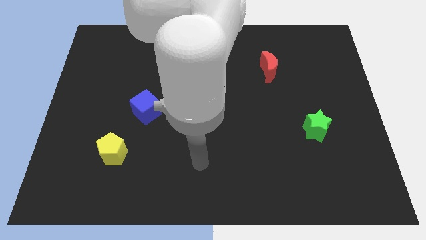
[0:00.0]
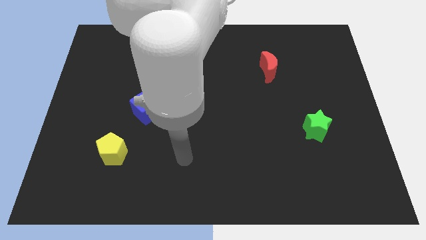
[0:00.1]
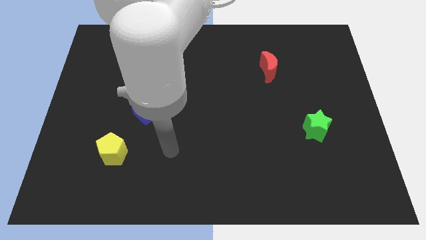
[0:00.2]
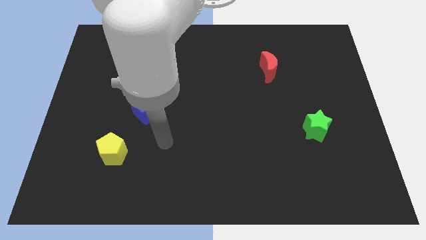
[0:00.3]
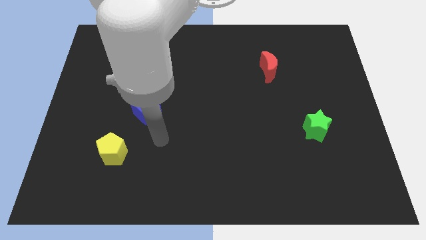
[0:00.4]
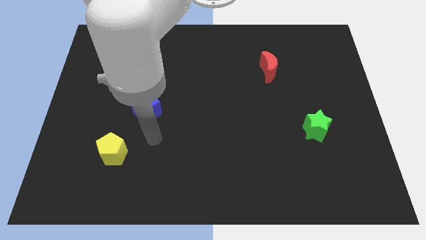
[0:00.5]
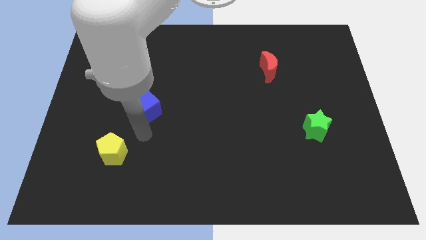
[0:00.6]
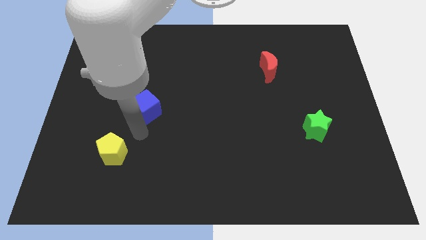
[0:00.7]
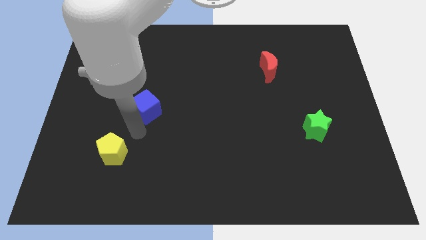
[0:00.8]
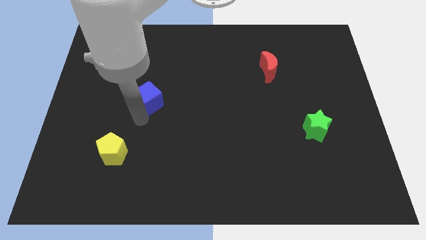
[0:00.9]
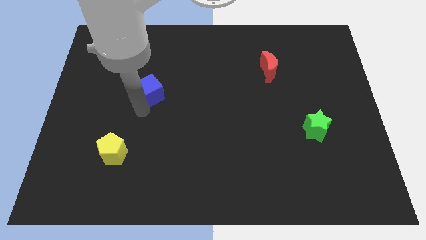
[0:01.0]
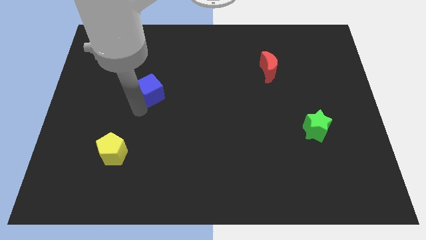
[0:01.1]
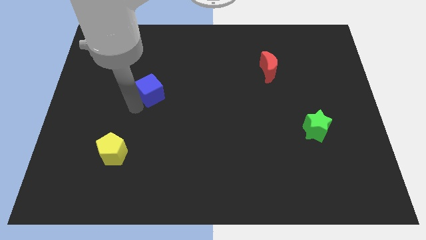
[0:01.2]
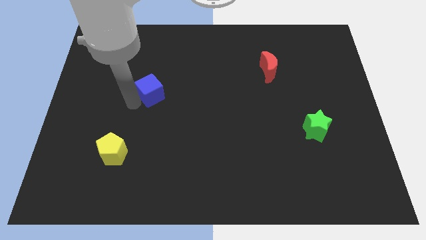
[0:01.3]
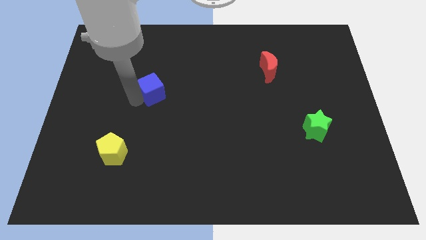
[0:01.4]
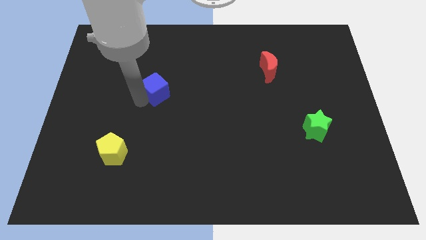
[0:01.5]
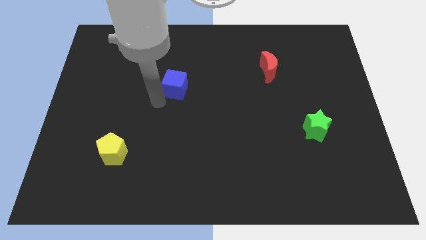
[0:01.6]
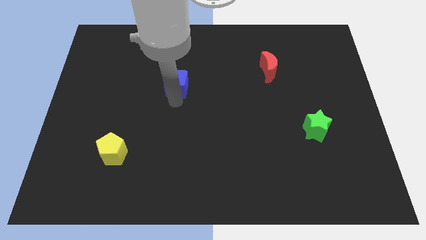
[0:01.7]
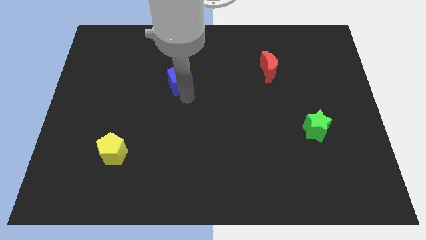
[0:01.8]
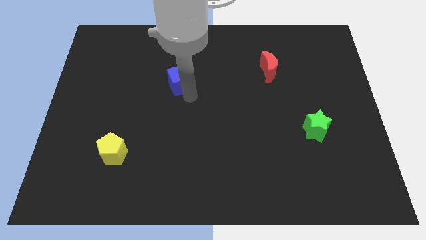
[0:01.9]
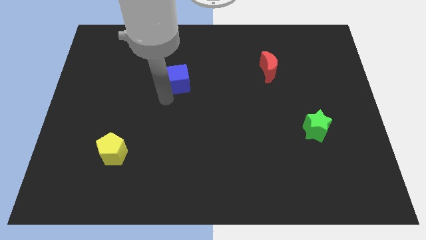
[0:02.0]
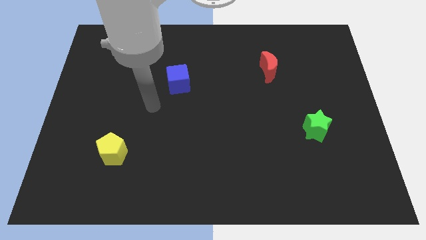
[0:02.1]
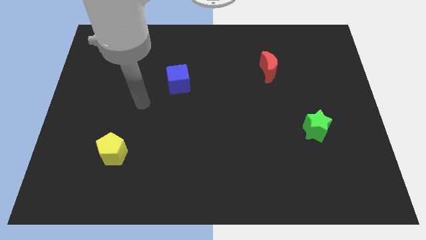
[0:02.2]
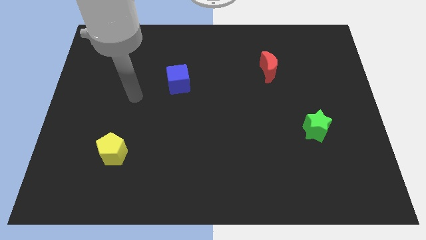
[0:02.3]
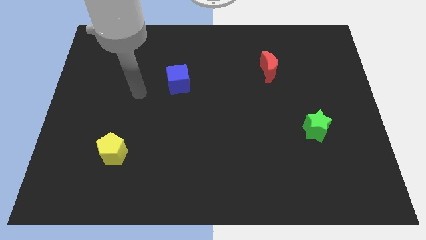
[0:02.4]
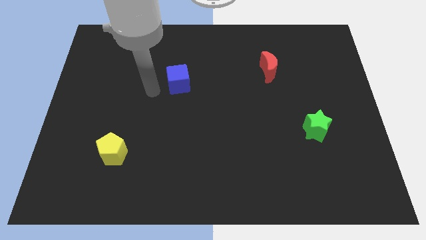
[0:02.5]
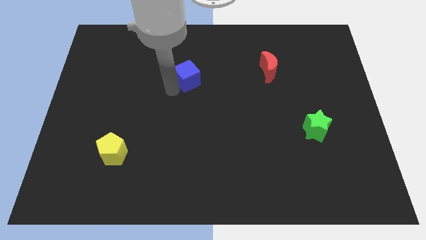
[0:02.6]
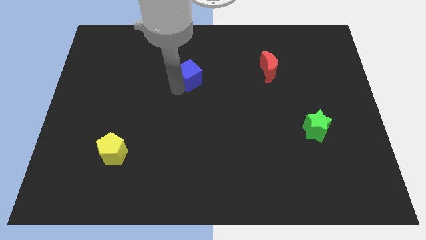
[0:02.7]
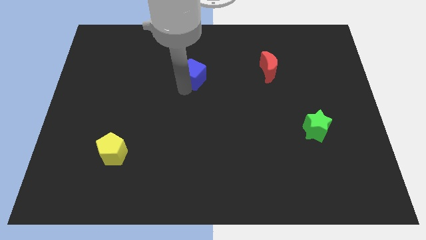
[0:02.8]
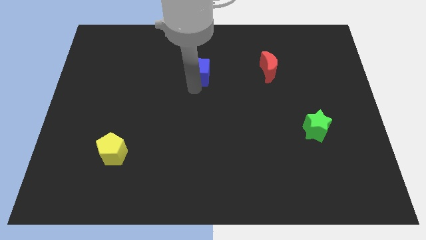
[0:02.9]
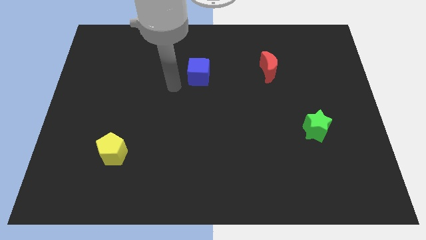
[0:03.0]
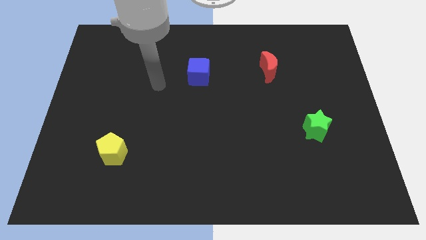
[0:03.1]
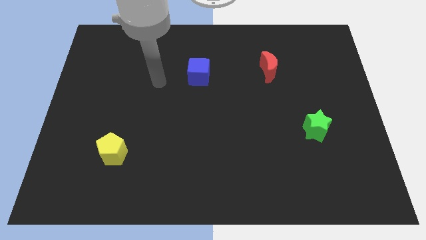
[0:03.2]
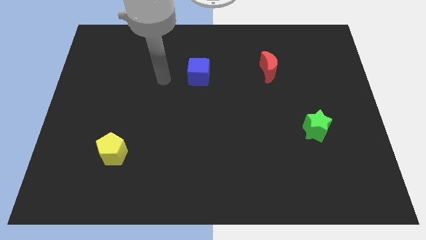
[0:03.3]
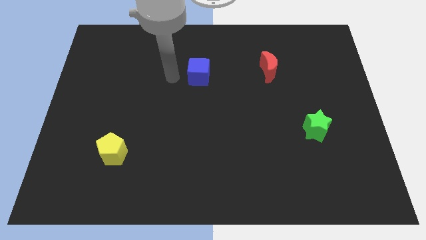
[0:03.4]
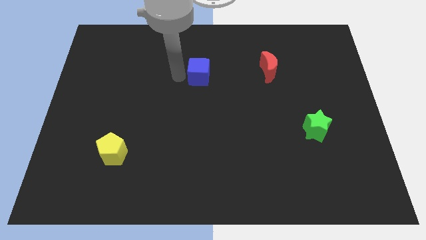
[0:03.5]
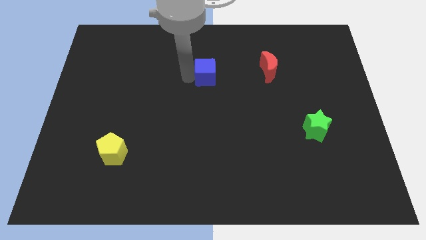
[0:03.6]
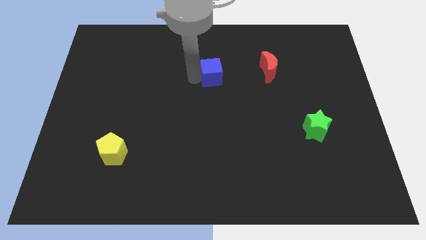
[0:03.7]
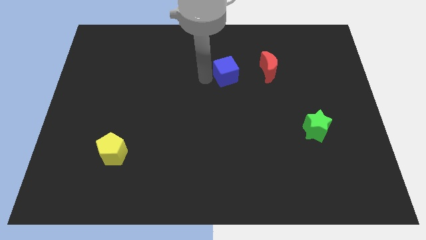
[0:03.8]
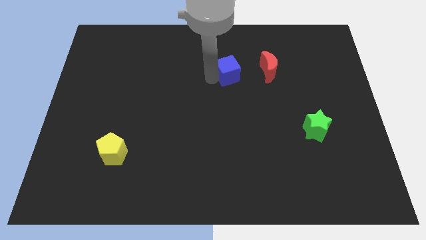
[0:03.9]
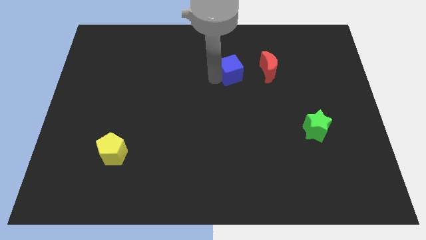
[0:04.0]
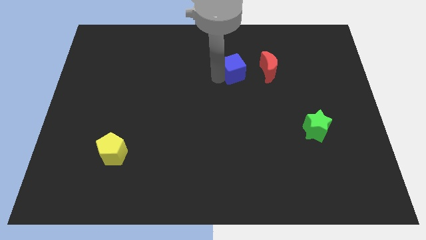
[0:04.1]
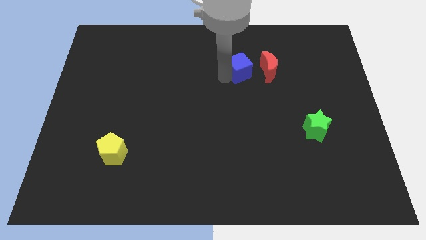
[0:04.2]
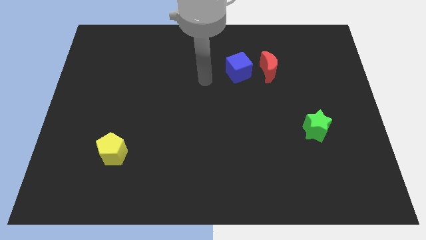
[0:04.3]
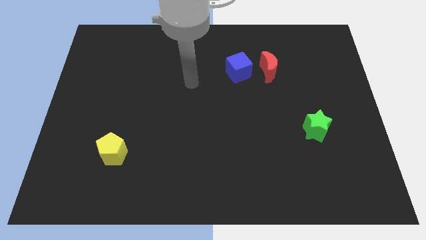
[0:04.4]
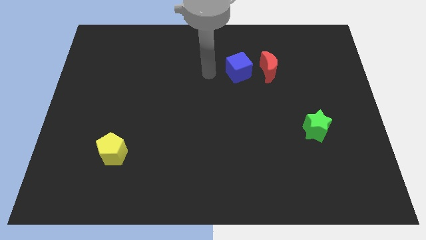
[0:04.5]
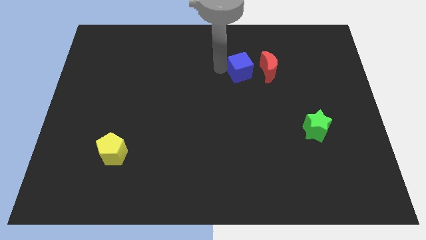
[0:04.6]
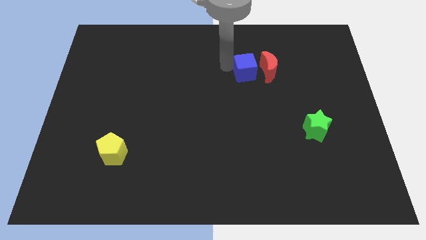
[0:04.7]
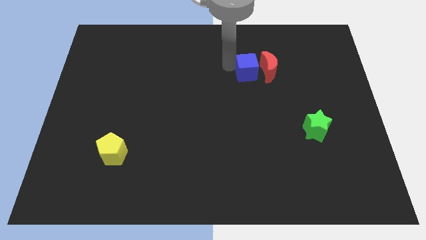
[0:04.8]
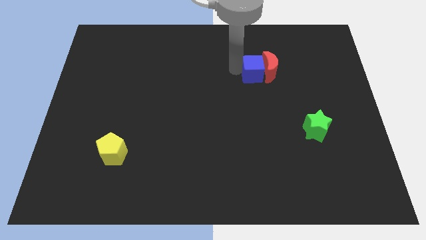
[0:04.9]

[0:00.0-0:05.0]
put the cube close to the moon

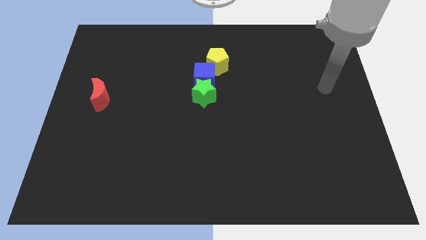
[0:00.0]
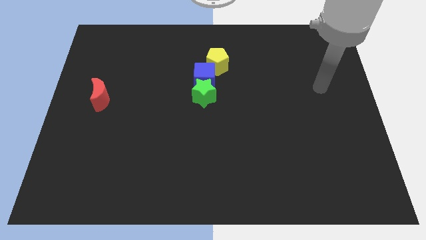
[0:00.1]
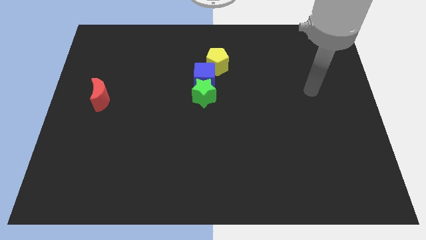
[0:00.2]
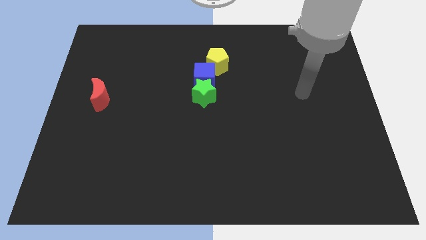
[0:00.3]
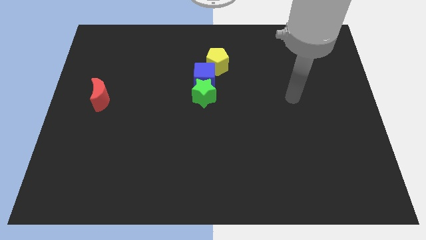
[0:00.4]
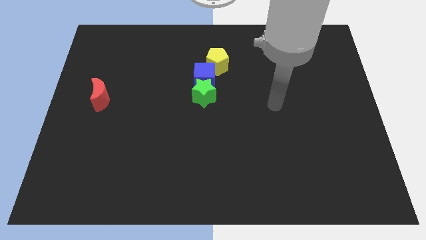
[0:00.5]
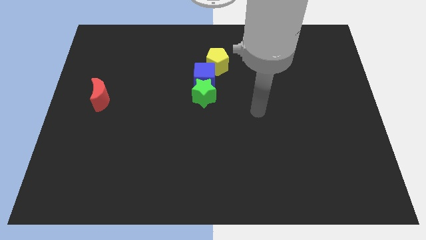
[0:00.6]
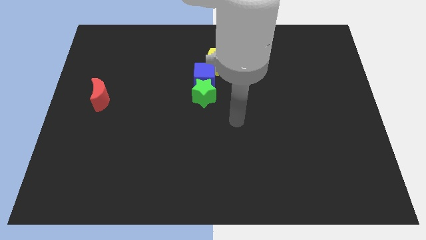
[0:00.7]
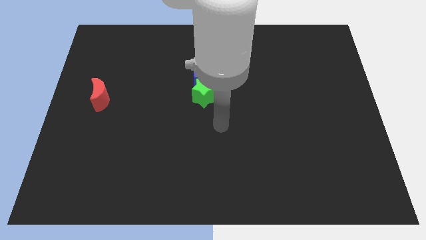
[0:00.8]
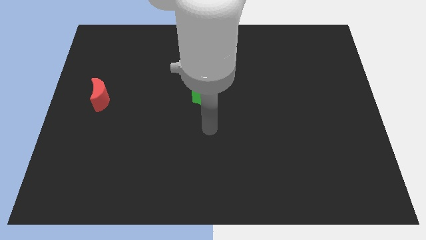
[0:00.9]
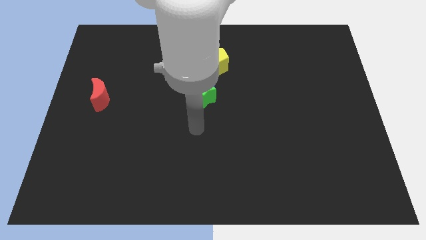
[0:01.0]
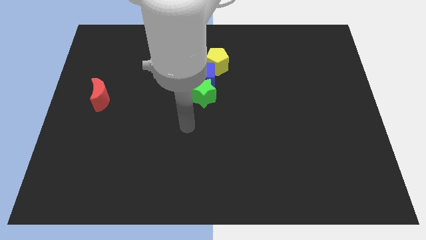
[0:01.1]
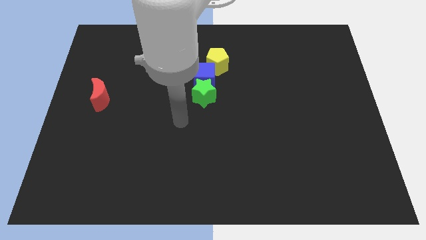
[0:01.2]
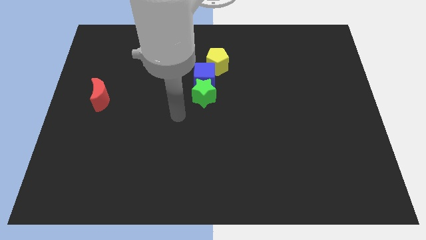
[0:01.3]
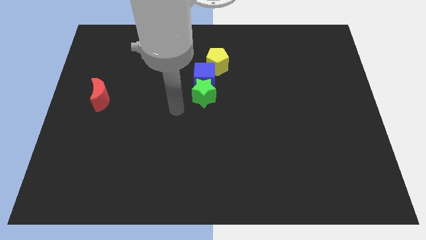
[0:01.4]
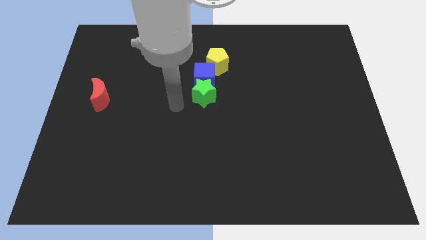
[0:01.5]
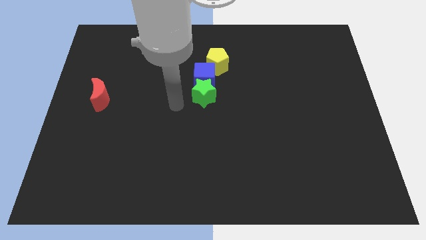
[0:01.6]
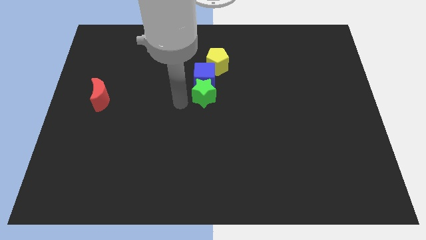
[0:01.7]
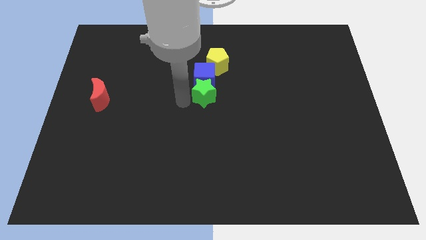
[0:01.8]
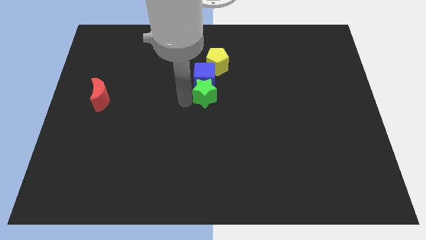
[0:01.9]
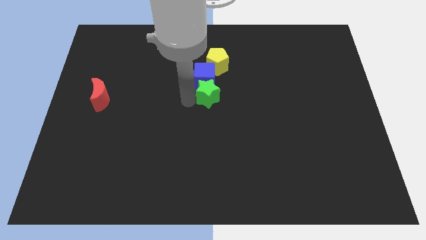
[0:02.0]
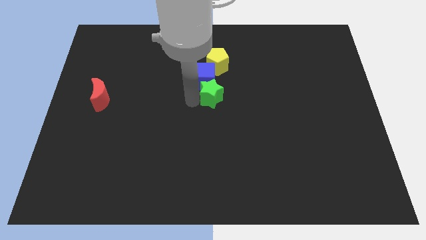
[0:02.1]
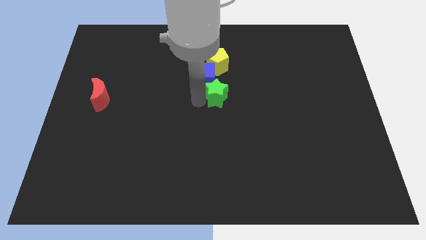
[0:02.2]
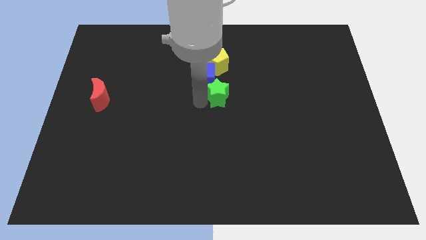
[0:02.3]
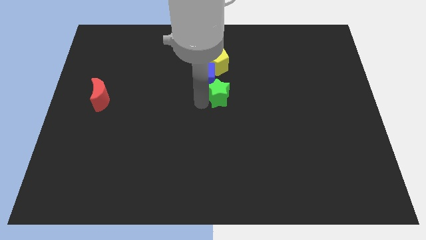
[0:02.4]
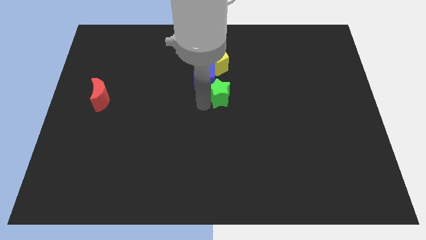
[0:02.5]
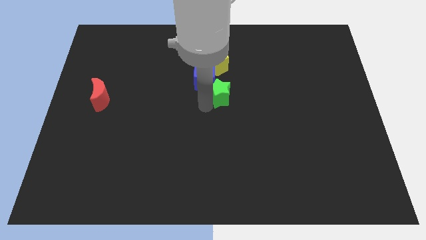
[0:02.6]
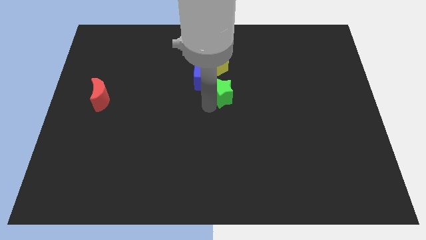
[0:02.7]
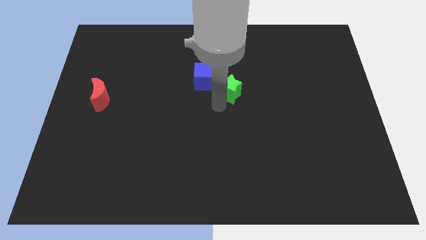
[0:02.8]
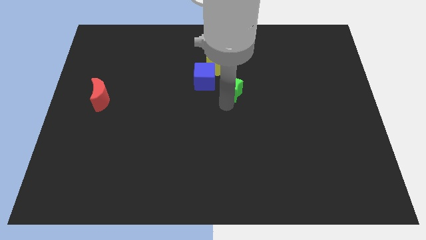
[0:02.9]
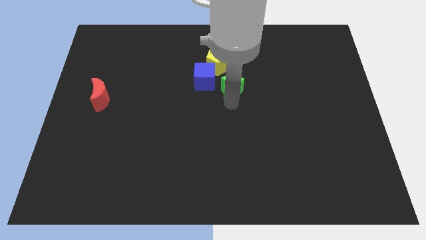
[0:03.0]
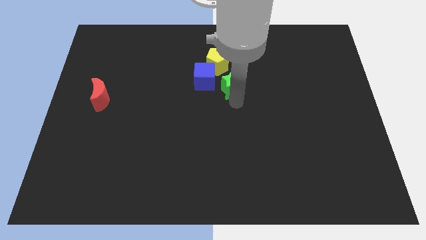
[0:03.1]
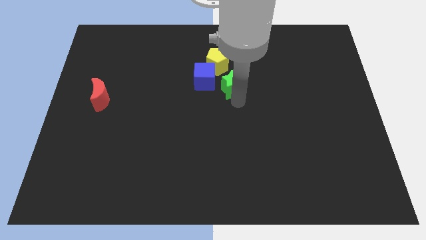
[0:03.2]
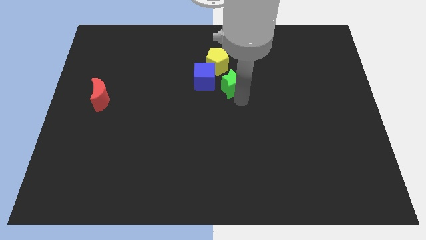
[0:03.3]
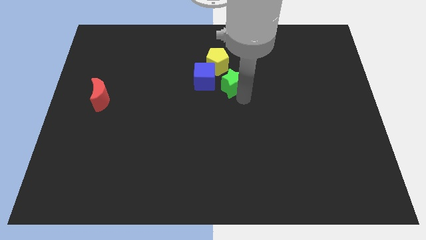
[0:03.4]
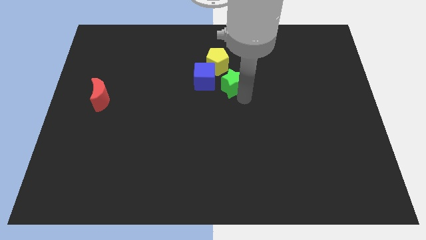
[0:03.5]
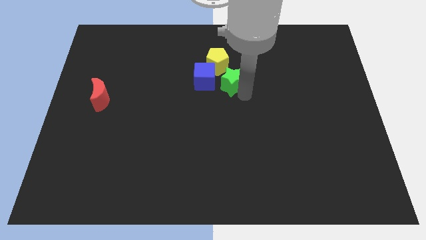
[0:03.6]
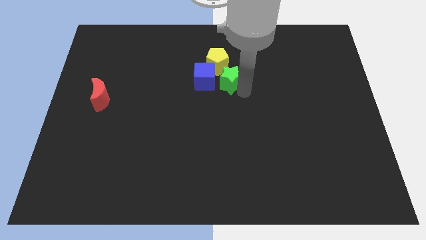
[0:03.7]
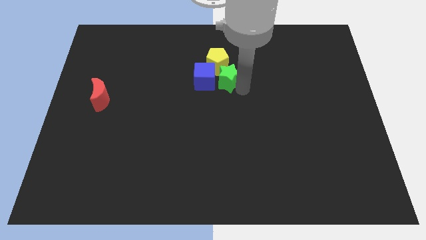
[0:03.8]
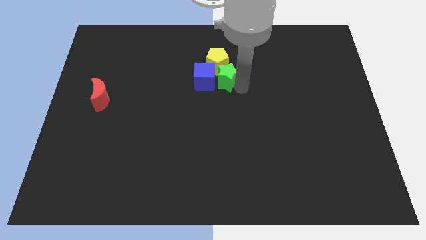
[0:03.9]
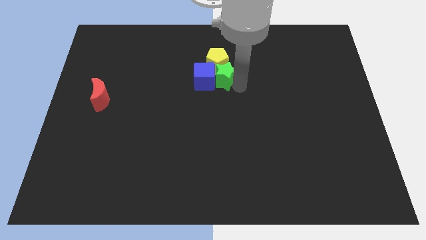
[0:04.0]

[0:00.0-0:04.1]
slide the star next to the yellow pentagon
